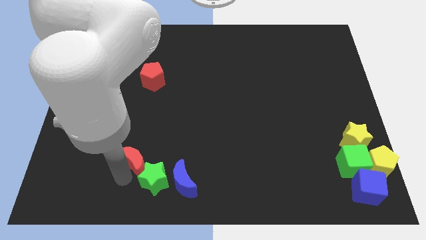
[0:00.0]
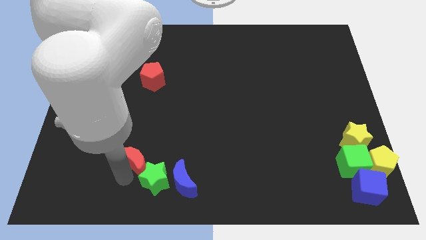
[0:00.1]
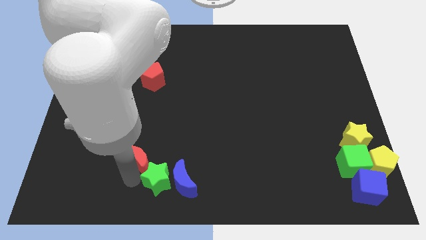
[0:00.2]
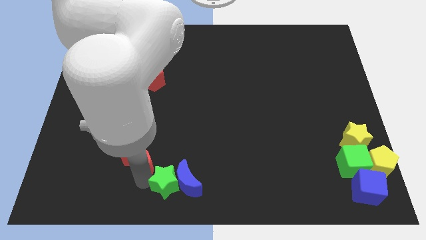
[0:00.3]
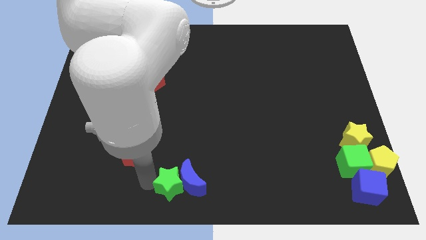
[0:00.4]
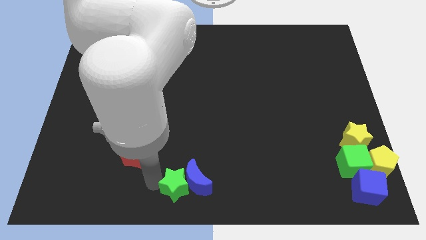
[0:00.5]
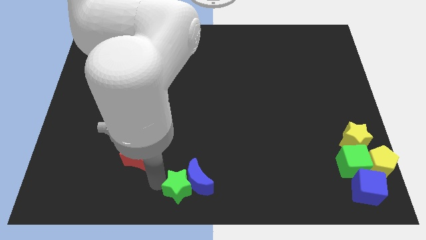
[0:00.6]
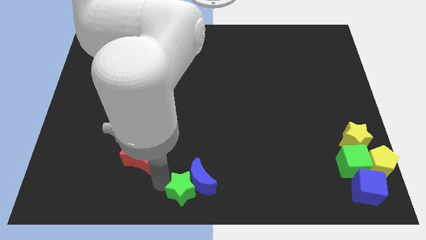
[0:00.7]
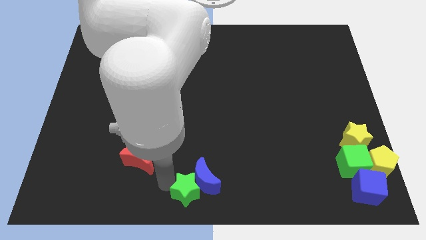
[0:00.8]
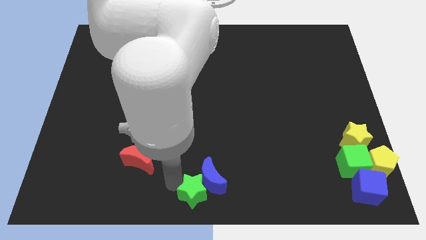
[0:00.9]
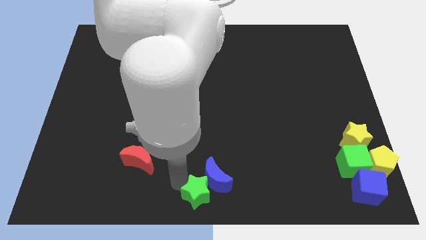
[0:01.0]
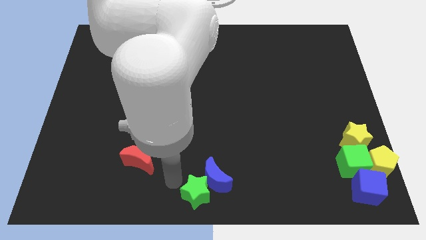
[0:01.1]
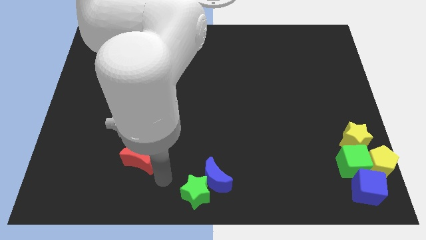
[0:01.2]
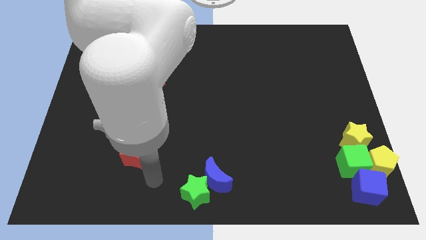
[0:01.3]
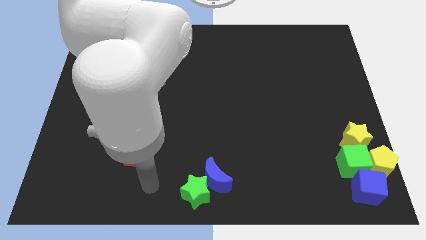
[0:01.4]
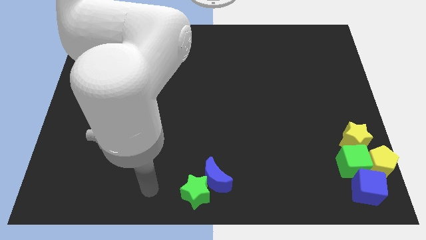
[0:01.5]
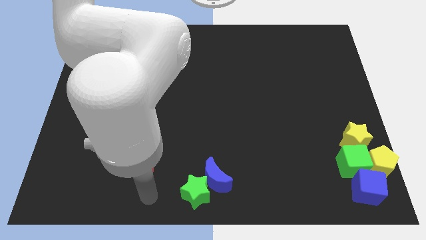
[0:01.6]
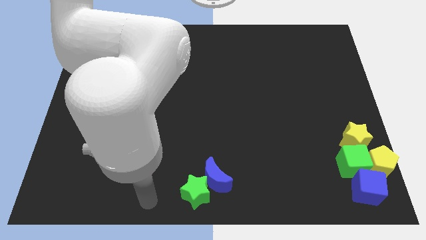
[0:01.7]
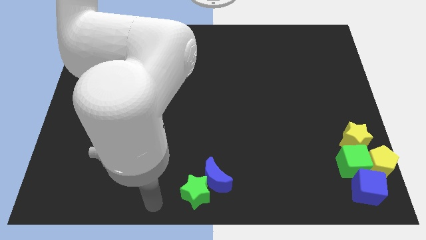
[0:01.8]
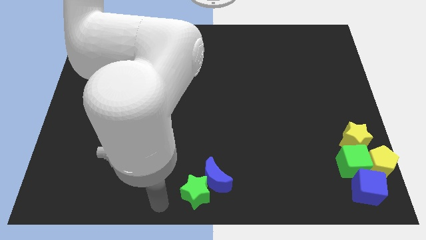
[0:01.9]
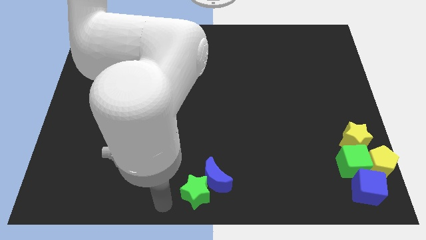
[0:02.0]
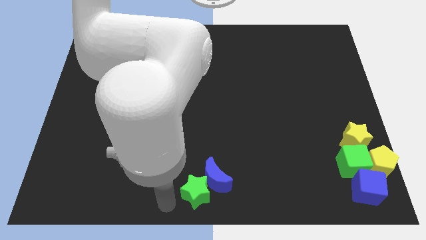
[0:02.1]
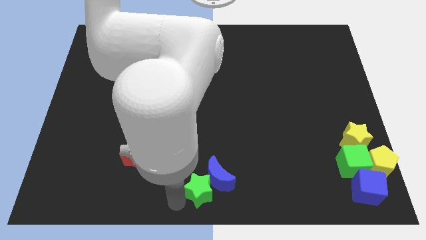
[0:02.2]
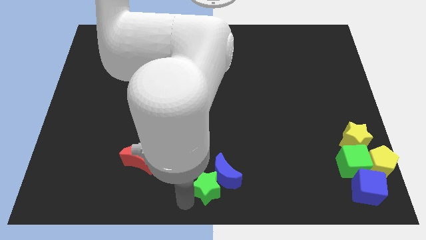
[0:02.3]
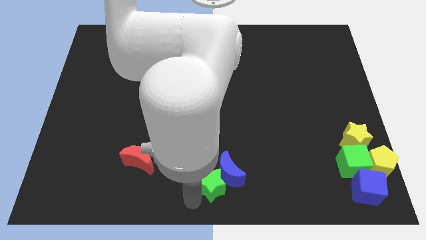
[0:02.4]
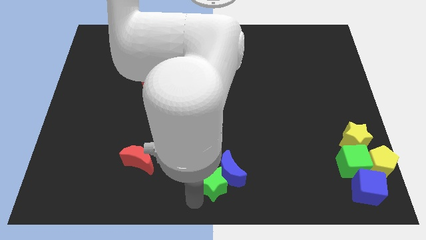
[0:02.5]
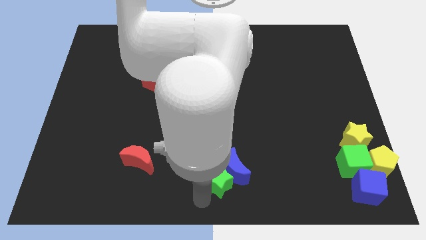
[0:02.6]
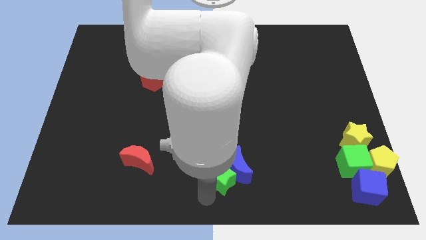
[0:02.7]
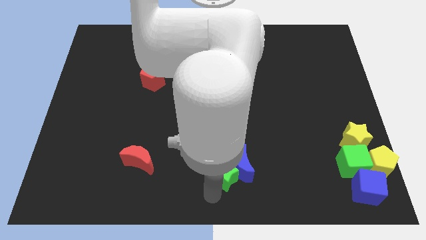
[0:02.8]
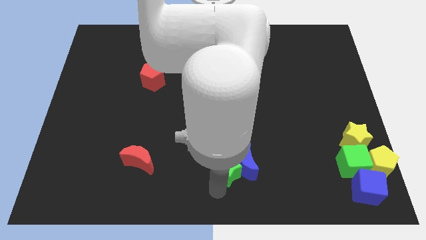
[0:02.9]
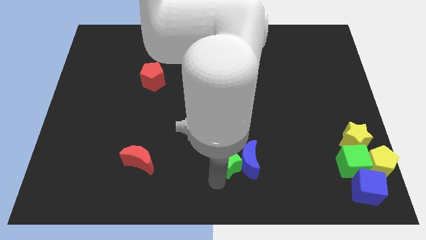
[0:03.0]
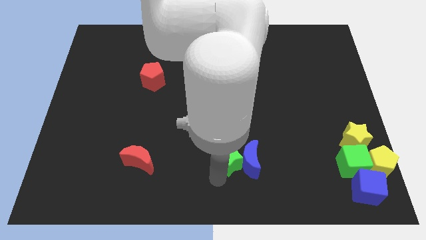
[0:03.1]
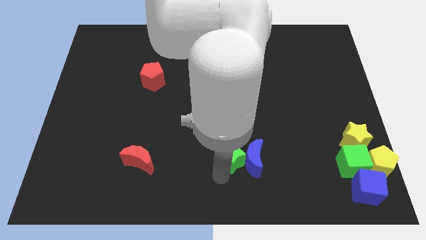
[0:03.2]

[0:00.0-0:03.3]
separate the red moon and green star

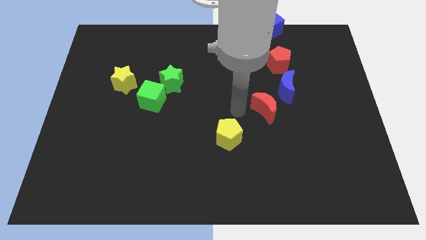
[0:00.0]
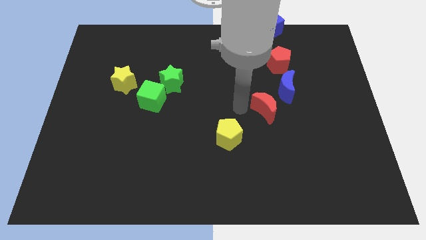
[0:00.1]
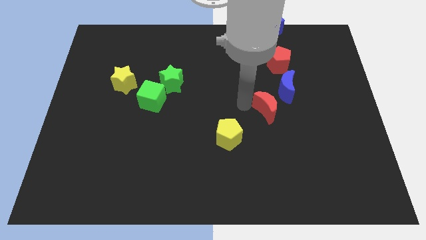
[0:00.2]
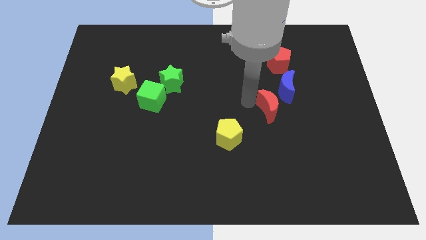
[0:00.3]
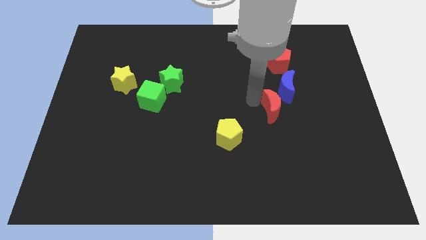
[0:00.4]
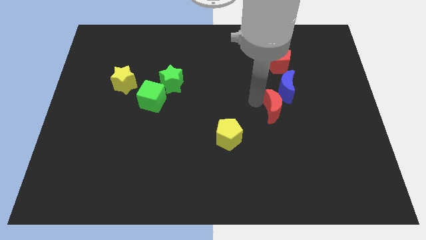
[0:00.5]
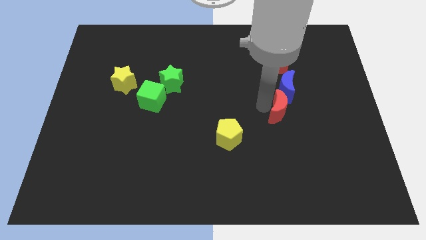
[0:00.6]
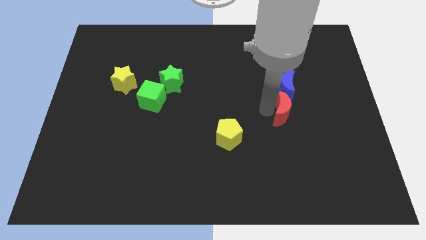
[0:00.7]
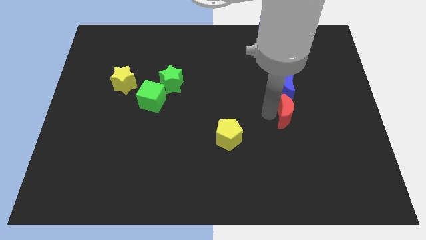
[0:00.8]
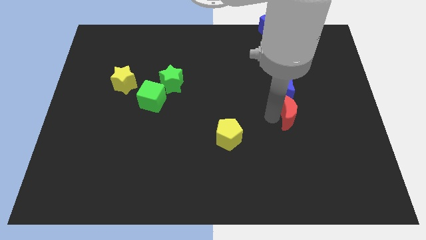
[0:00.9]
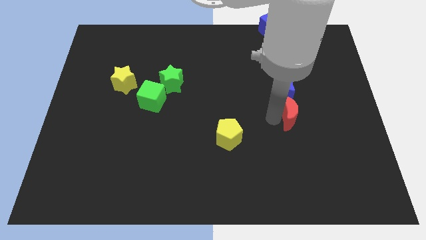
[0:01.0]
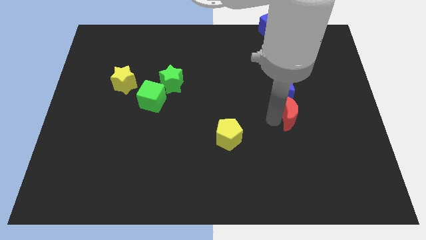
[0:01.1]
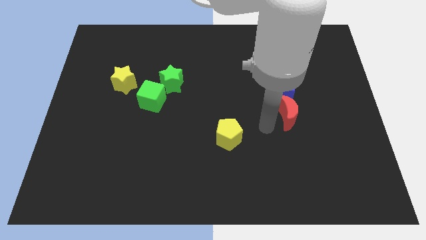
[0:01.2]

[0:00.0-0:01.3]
put the red moon at the bottom of the blue moon

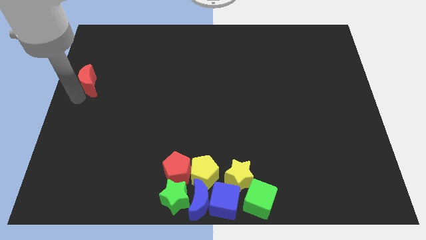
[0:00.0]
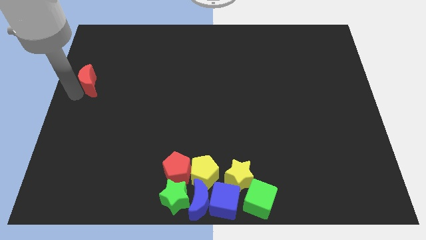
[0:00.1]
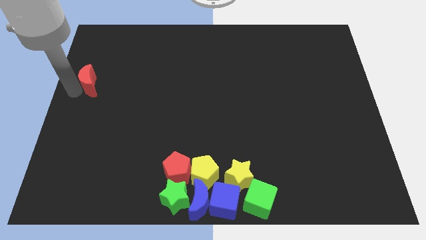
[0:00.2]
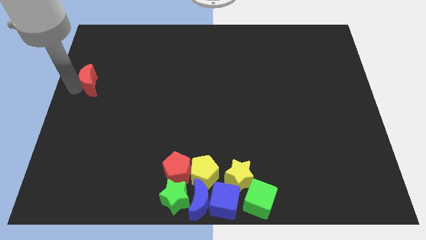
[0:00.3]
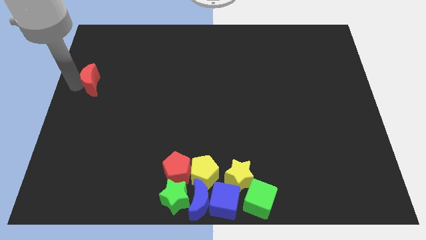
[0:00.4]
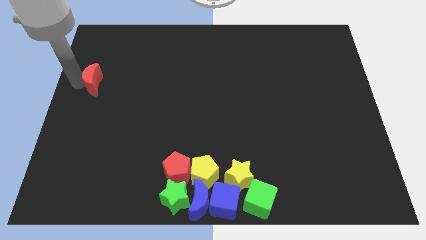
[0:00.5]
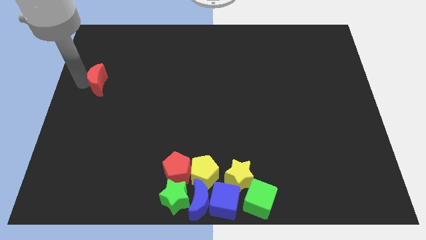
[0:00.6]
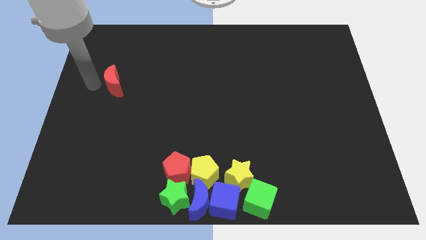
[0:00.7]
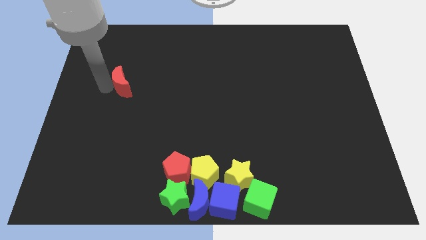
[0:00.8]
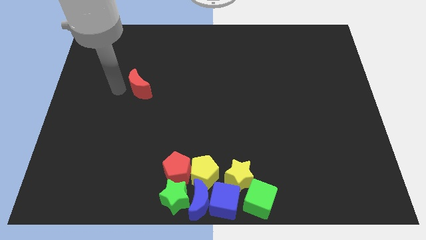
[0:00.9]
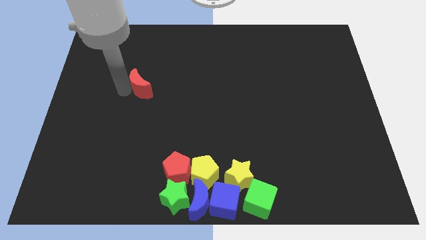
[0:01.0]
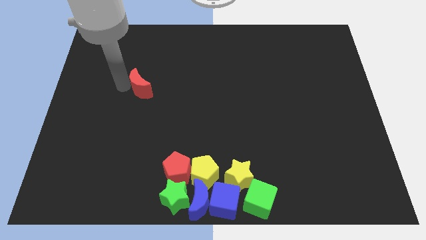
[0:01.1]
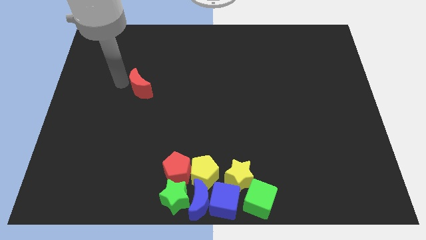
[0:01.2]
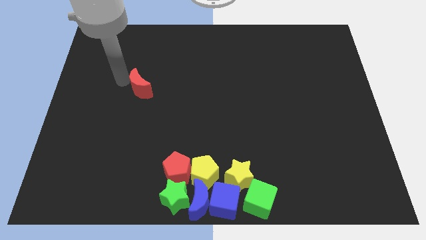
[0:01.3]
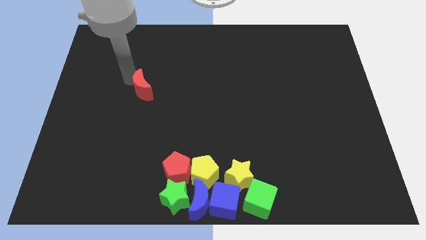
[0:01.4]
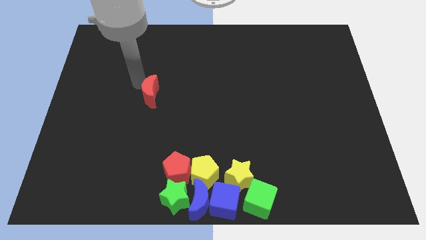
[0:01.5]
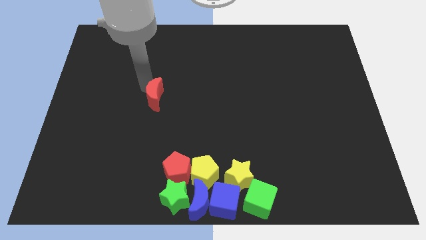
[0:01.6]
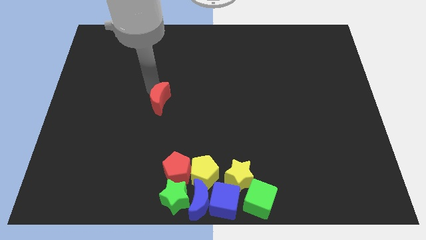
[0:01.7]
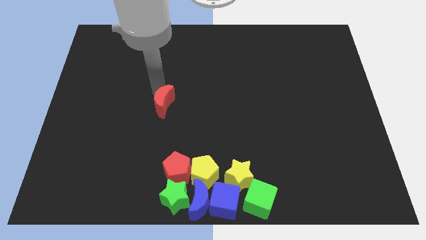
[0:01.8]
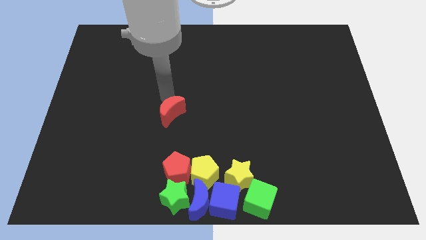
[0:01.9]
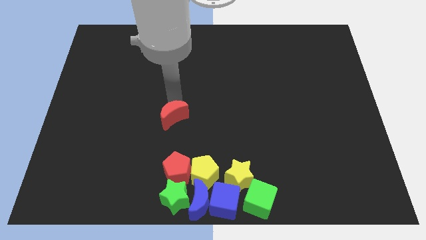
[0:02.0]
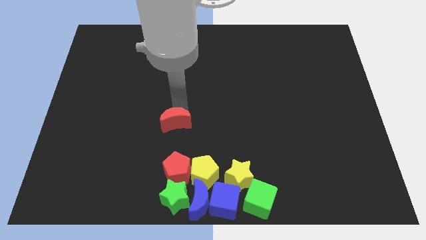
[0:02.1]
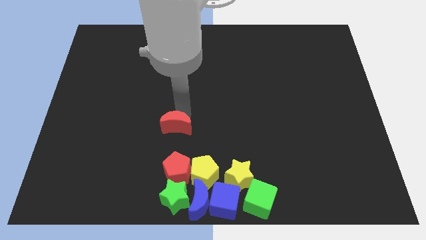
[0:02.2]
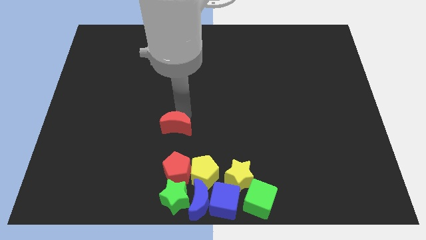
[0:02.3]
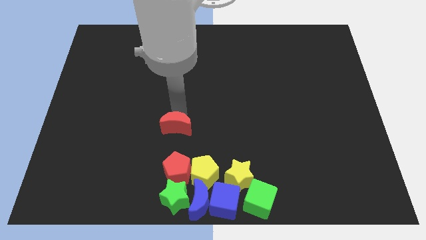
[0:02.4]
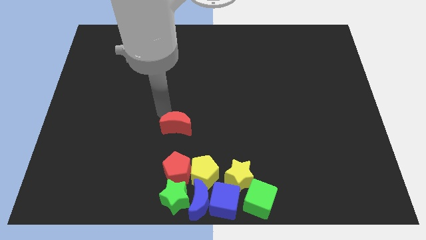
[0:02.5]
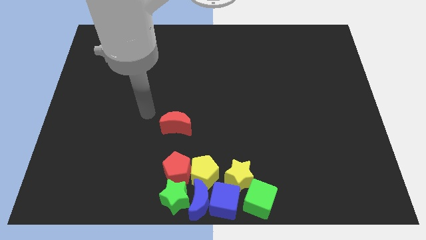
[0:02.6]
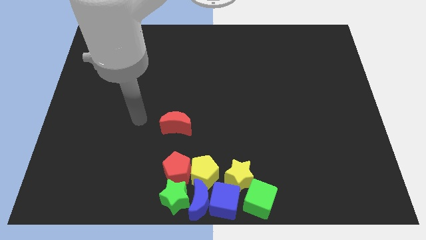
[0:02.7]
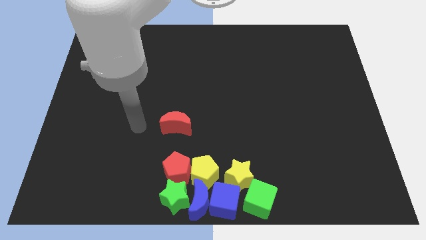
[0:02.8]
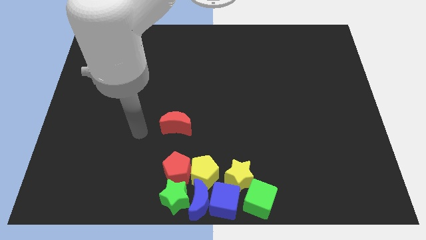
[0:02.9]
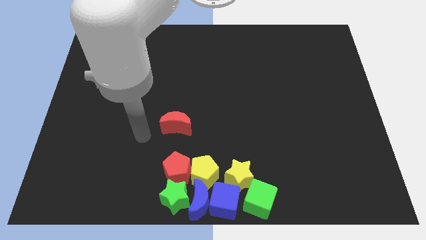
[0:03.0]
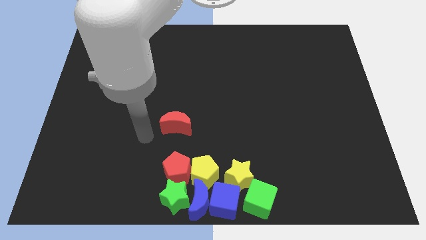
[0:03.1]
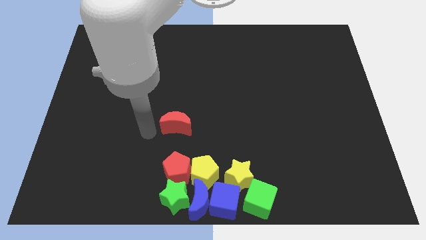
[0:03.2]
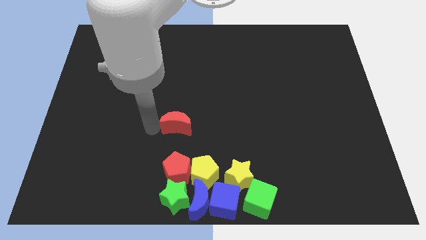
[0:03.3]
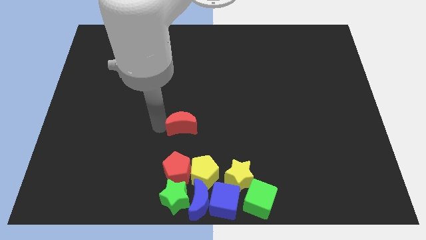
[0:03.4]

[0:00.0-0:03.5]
slide the red moon above the red pentagon

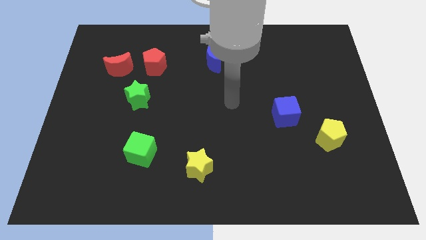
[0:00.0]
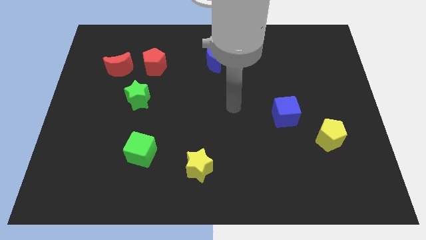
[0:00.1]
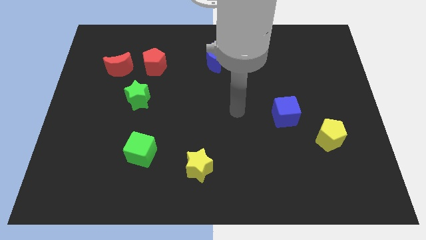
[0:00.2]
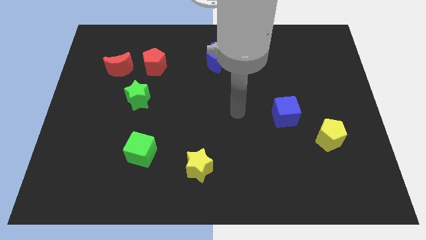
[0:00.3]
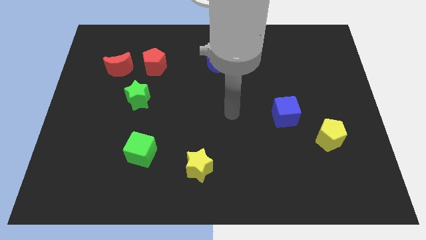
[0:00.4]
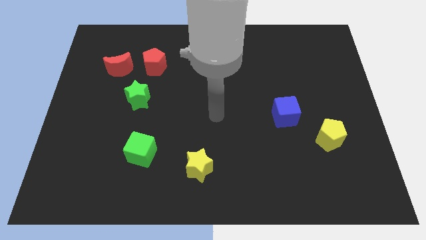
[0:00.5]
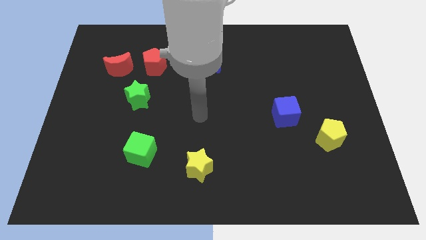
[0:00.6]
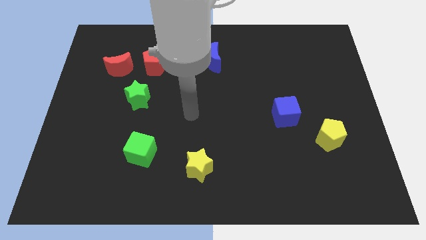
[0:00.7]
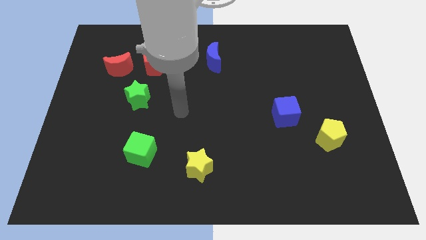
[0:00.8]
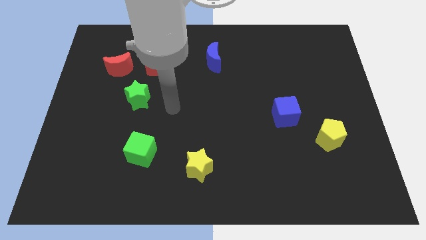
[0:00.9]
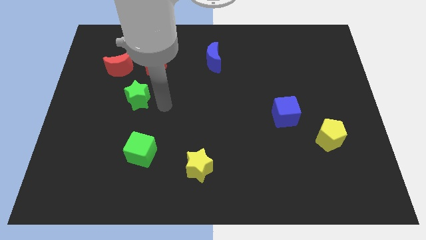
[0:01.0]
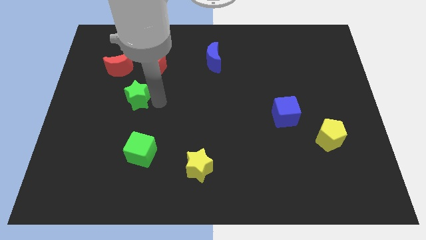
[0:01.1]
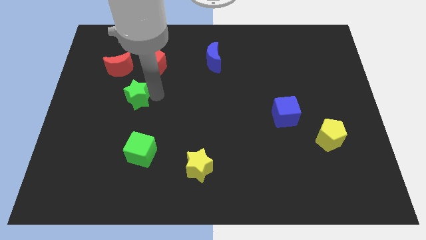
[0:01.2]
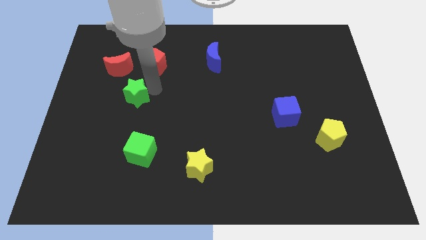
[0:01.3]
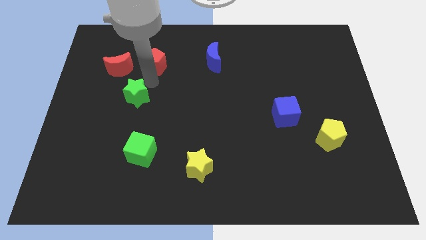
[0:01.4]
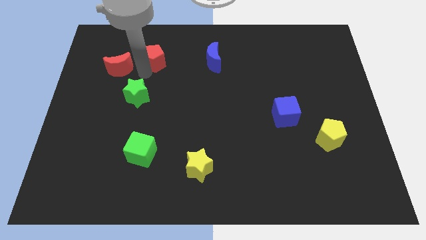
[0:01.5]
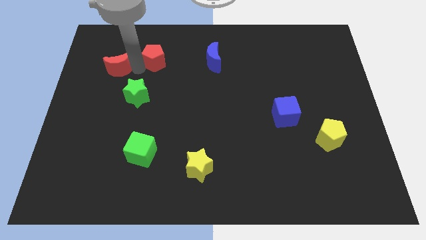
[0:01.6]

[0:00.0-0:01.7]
point the arm in between the red moon and the red pentagon
